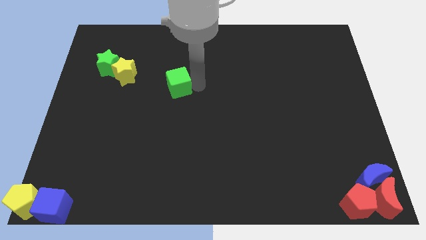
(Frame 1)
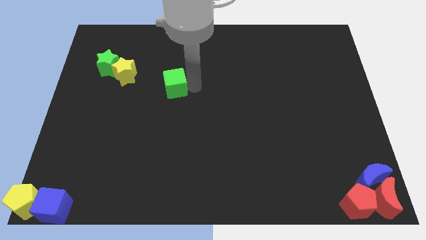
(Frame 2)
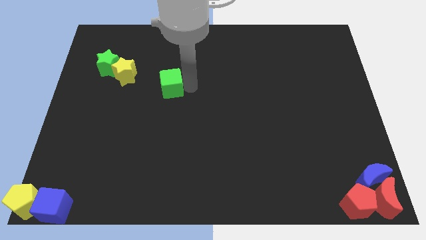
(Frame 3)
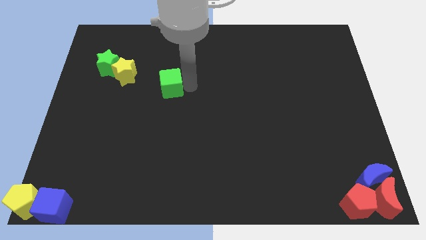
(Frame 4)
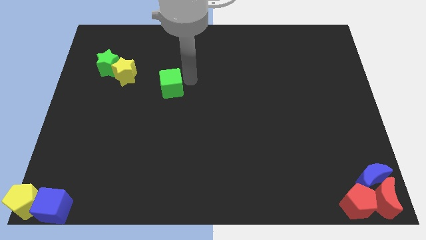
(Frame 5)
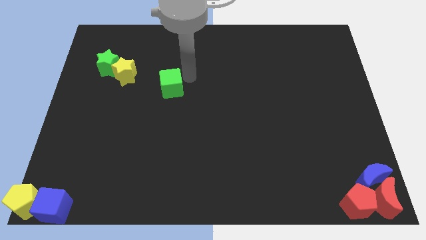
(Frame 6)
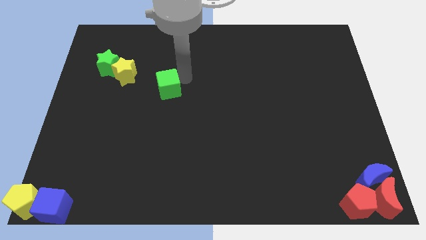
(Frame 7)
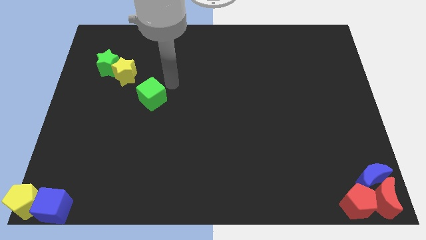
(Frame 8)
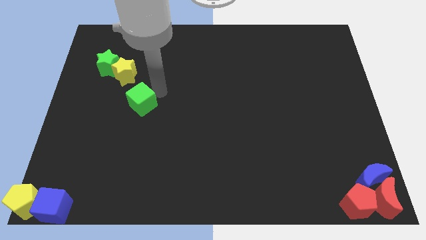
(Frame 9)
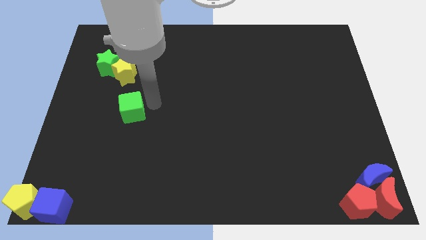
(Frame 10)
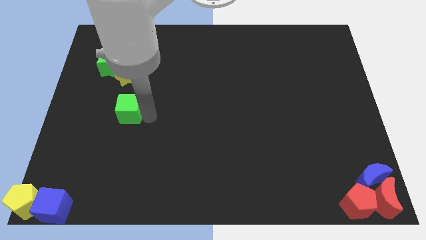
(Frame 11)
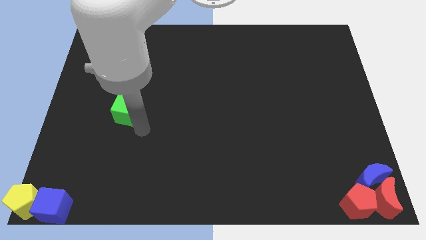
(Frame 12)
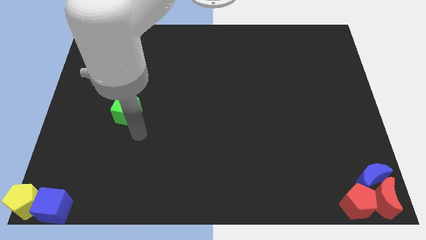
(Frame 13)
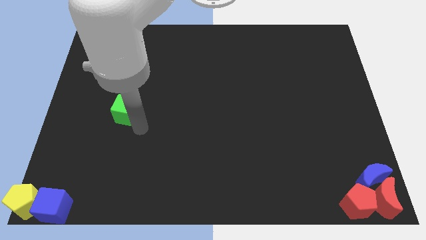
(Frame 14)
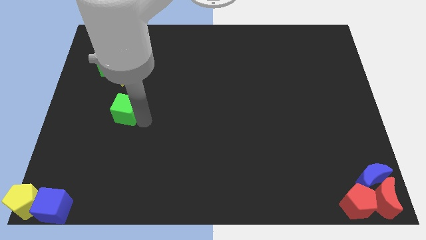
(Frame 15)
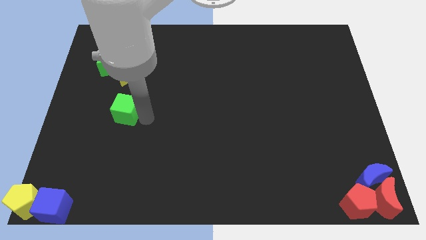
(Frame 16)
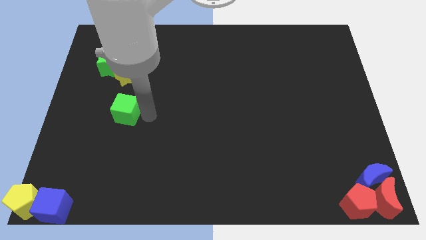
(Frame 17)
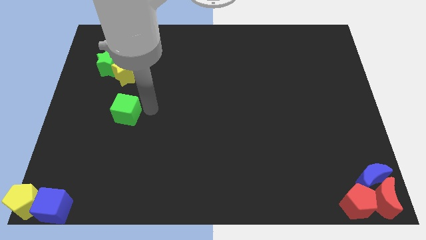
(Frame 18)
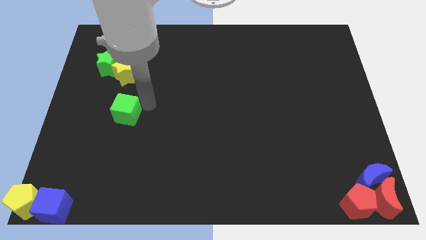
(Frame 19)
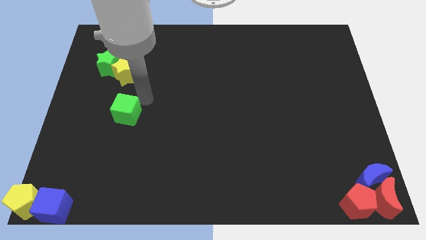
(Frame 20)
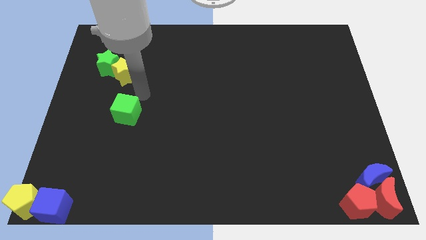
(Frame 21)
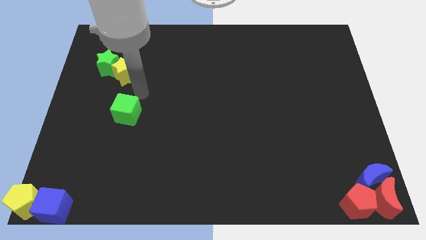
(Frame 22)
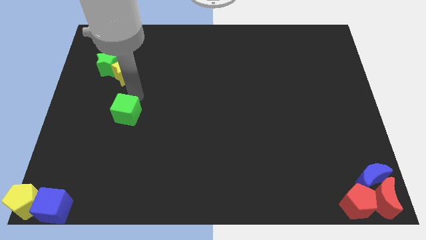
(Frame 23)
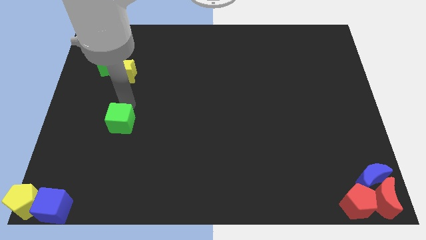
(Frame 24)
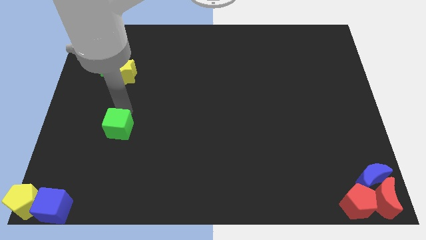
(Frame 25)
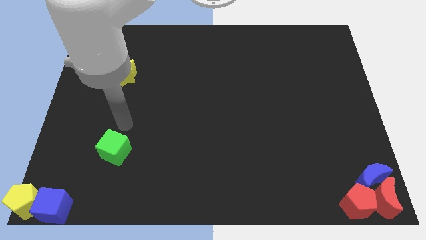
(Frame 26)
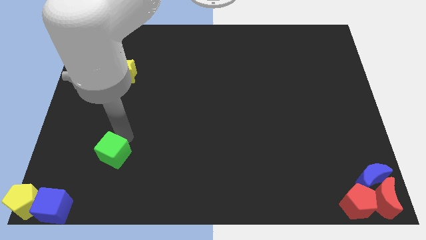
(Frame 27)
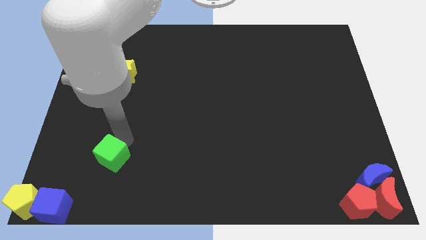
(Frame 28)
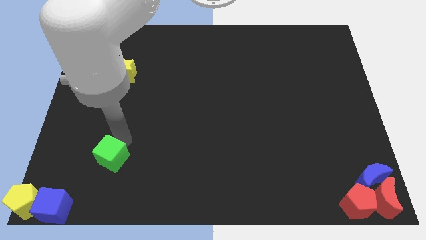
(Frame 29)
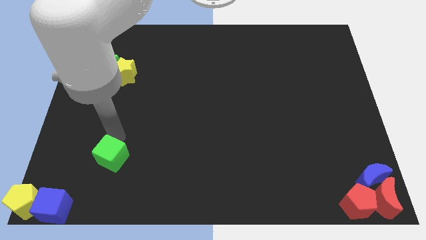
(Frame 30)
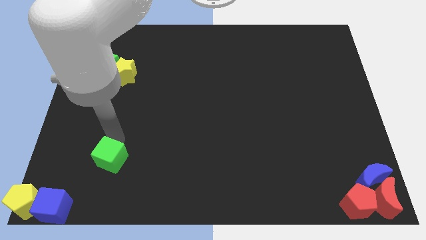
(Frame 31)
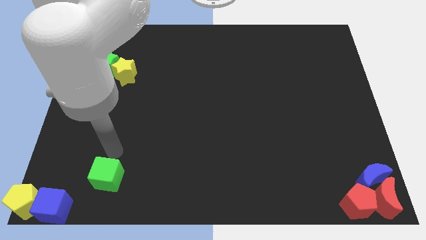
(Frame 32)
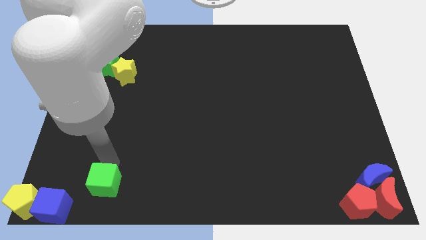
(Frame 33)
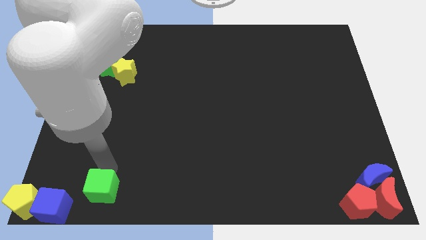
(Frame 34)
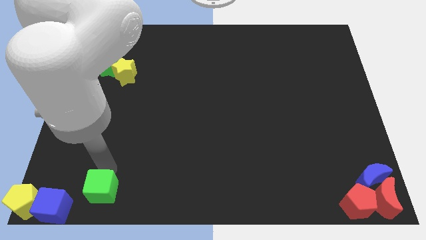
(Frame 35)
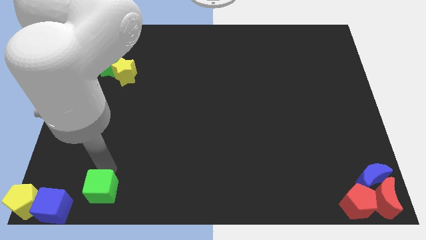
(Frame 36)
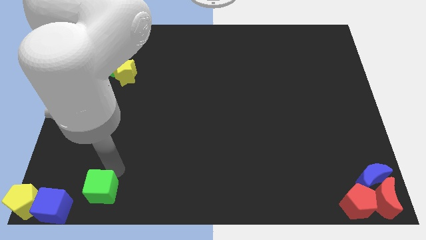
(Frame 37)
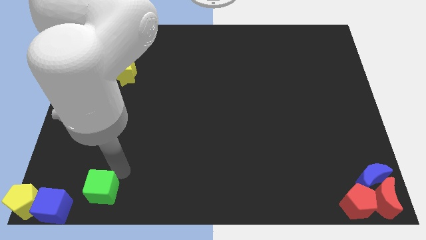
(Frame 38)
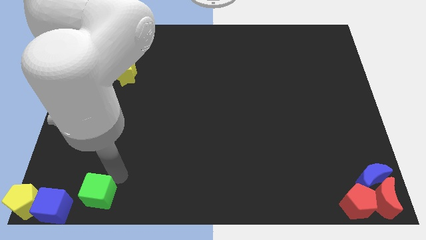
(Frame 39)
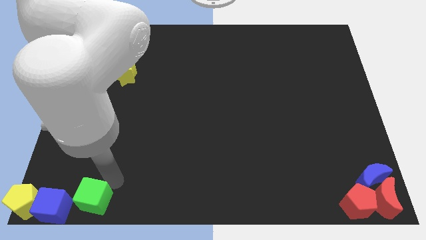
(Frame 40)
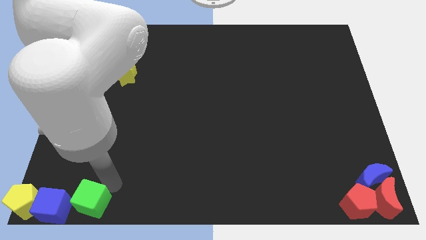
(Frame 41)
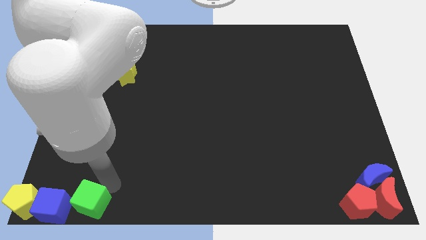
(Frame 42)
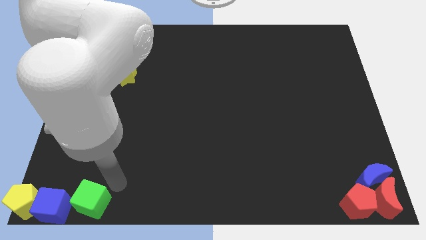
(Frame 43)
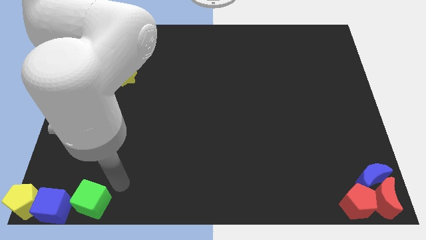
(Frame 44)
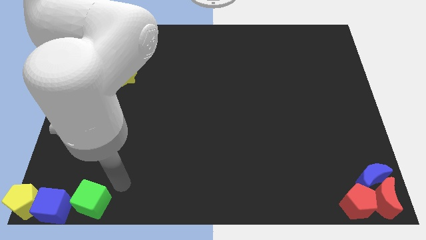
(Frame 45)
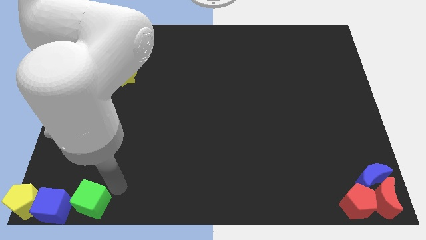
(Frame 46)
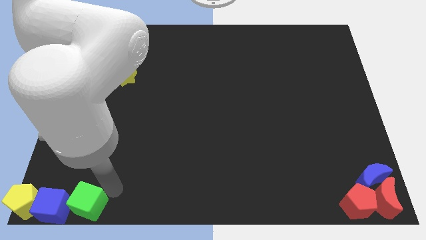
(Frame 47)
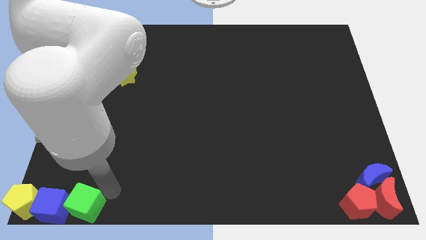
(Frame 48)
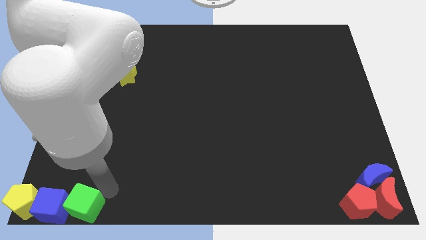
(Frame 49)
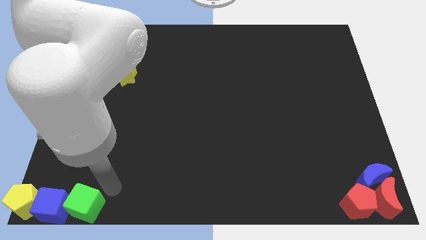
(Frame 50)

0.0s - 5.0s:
push the green cube into the blue cube

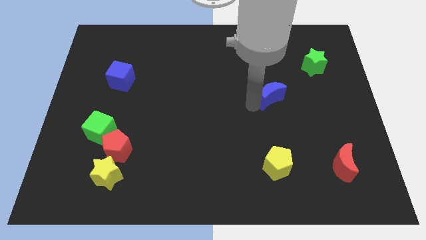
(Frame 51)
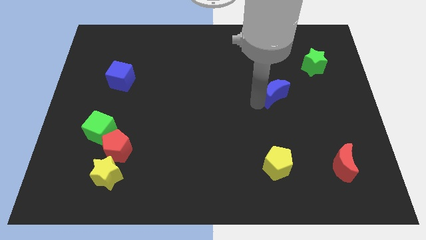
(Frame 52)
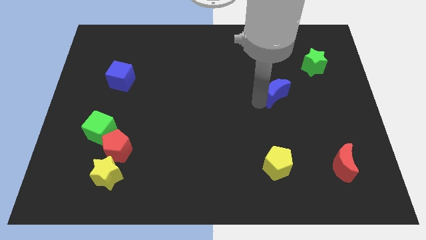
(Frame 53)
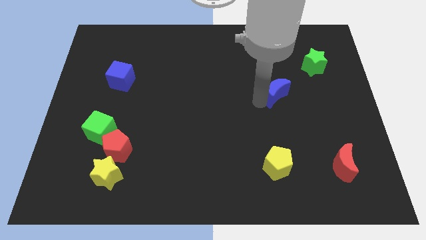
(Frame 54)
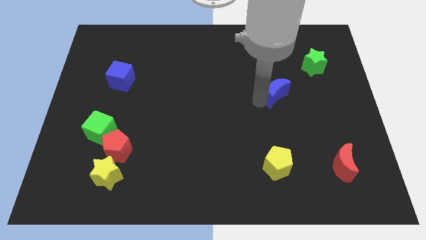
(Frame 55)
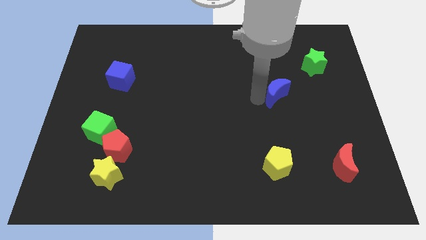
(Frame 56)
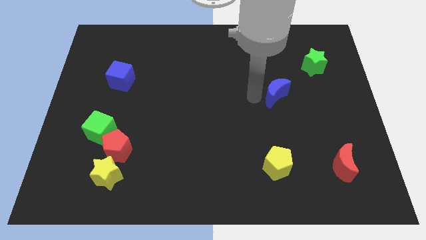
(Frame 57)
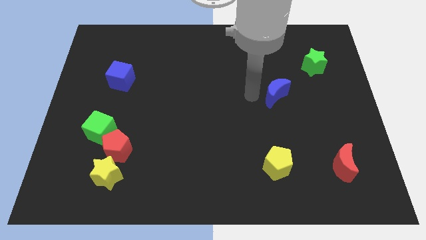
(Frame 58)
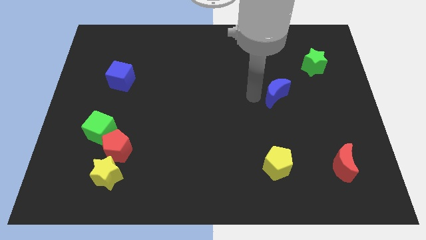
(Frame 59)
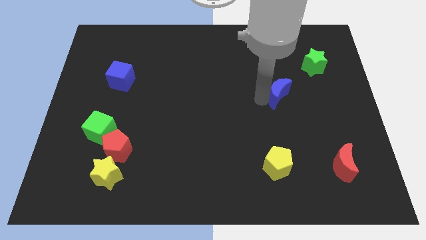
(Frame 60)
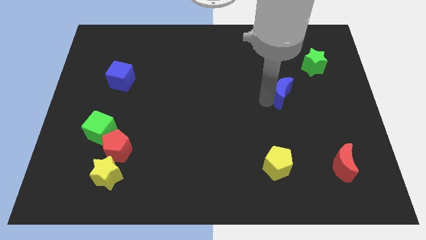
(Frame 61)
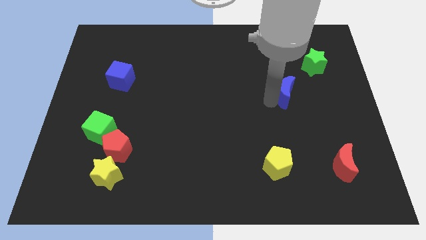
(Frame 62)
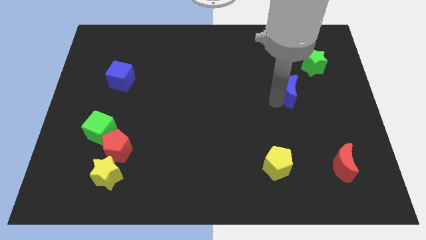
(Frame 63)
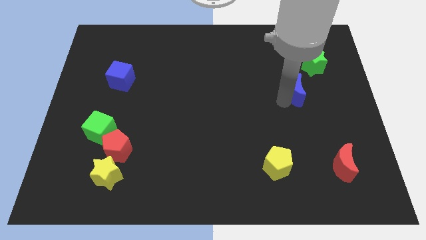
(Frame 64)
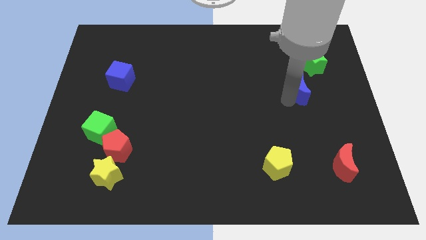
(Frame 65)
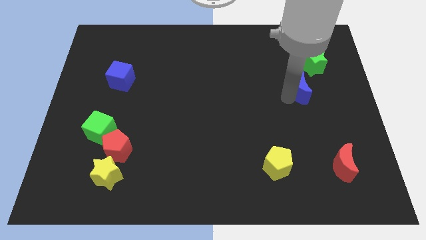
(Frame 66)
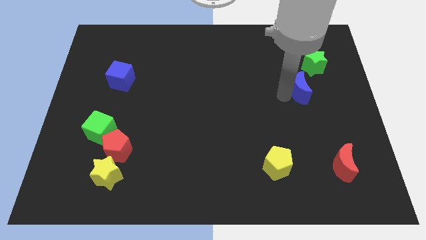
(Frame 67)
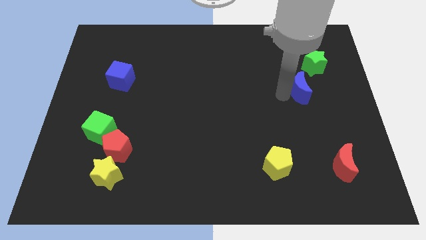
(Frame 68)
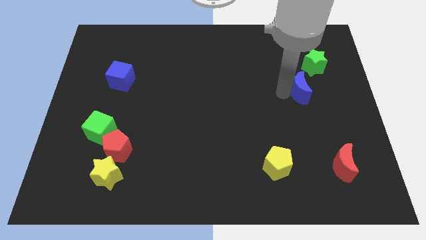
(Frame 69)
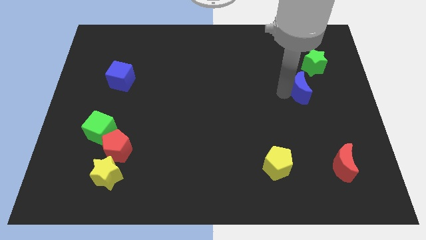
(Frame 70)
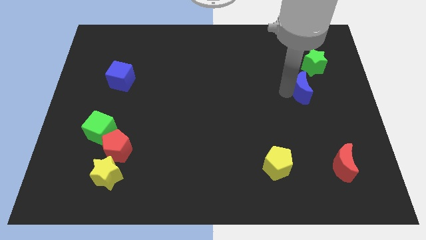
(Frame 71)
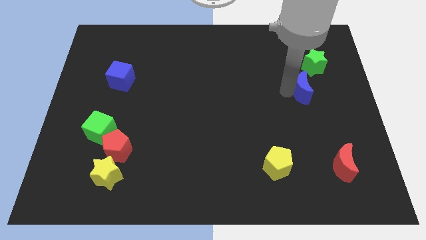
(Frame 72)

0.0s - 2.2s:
move the blue moon towards the right side of the board

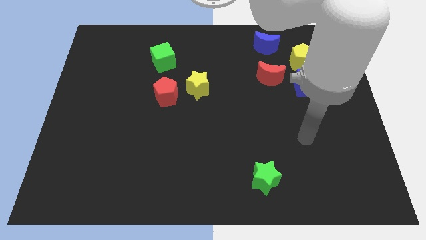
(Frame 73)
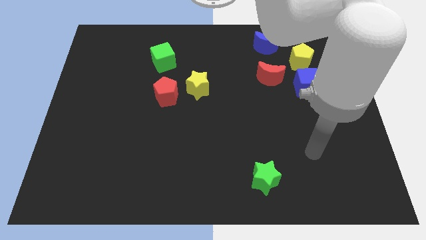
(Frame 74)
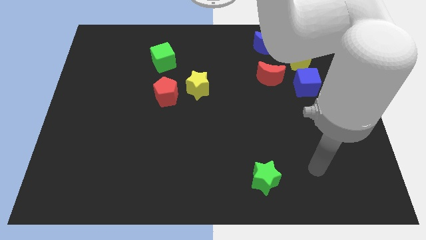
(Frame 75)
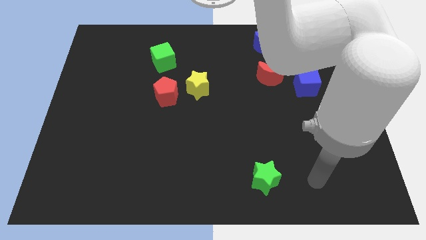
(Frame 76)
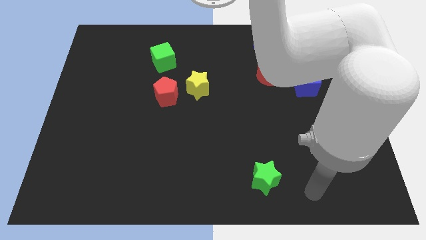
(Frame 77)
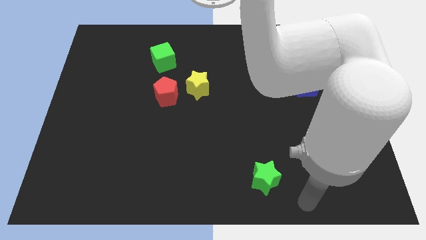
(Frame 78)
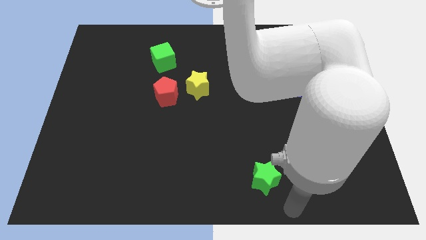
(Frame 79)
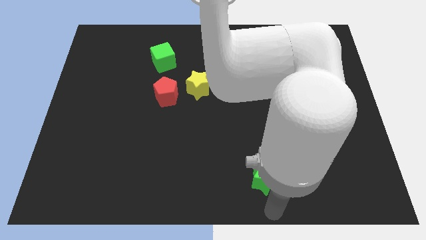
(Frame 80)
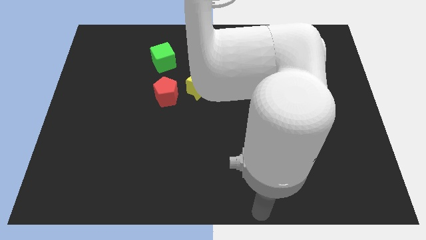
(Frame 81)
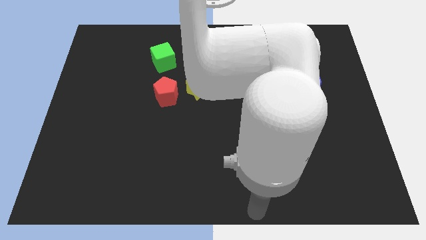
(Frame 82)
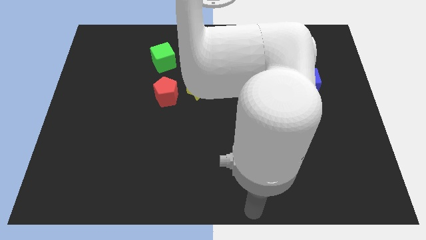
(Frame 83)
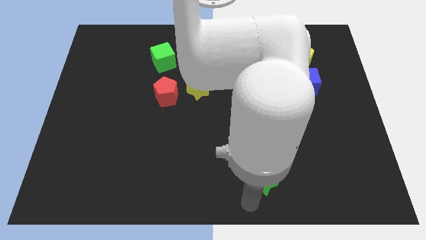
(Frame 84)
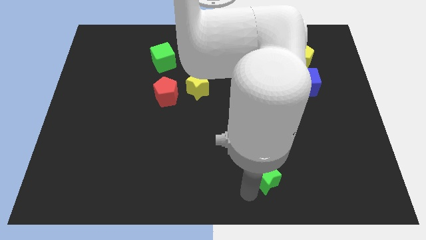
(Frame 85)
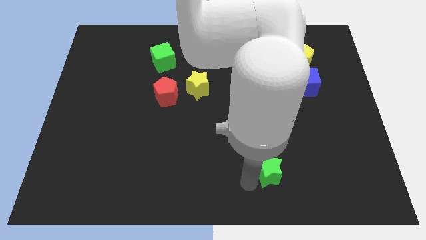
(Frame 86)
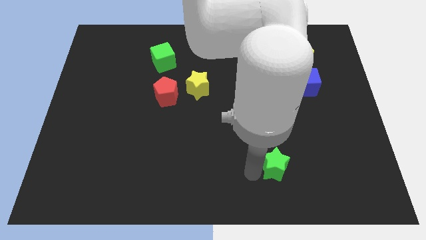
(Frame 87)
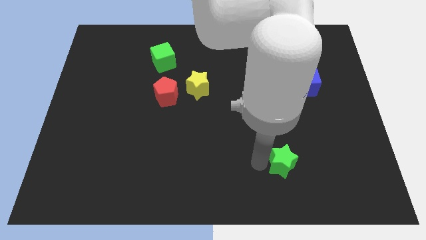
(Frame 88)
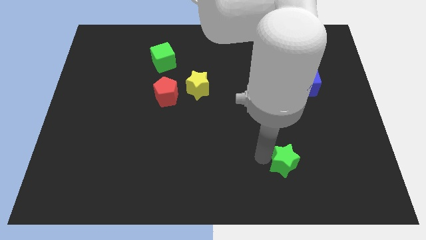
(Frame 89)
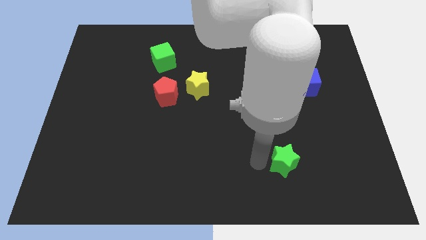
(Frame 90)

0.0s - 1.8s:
move green star slightly upwards
